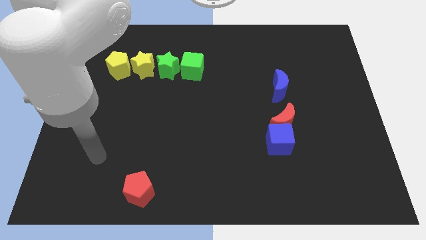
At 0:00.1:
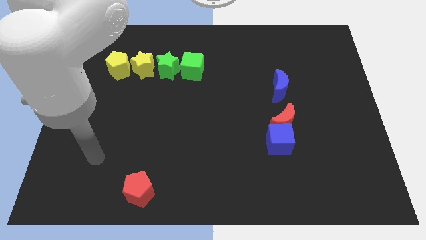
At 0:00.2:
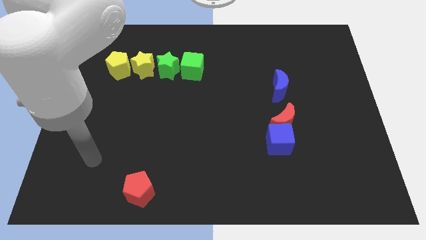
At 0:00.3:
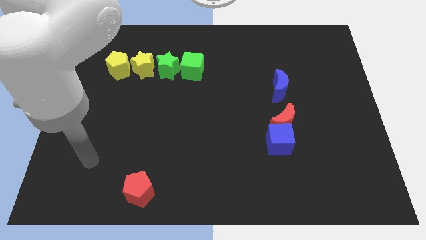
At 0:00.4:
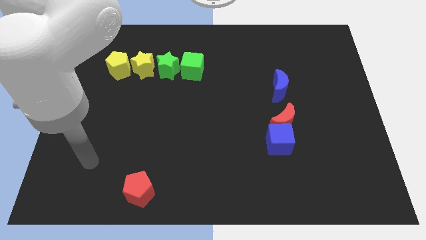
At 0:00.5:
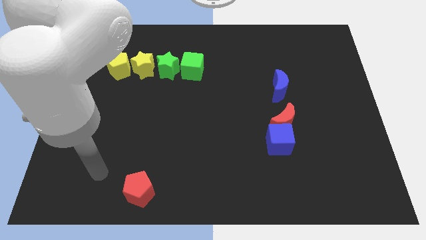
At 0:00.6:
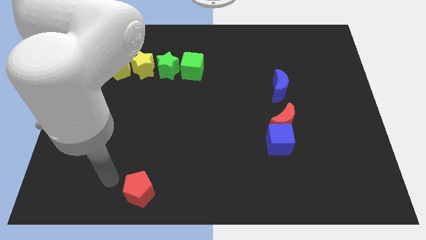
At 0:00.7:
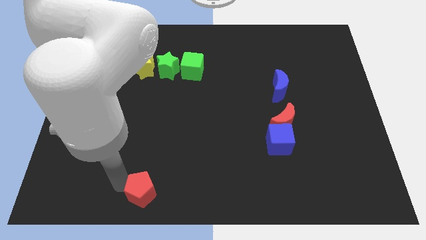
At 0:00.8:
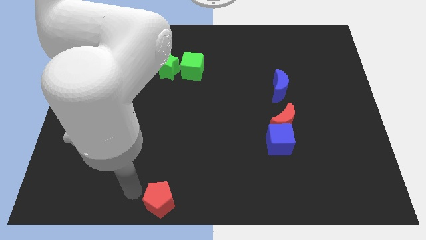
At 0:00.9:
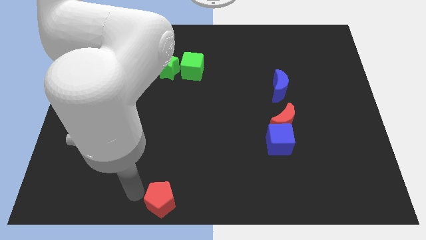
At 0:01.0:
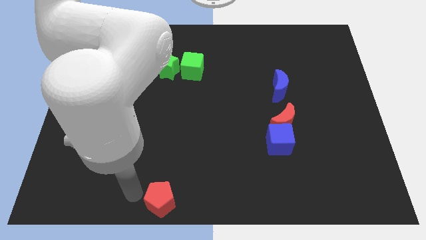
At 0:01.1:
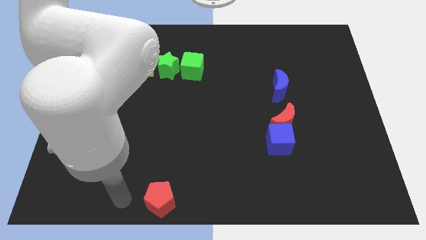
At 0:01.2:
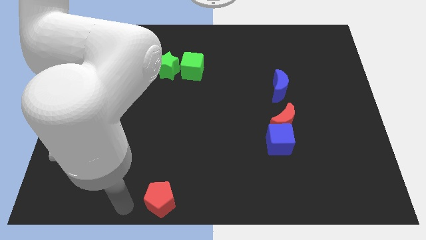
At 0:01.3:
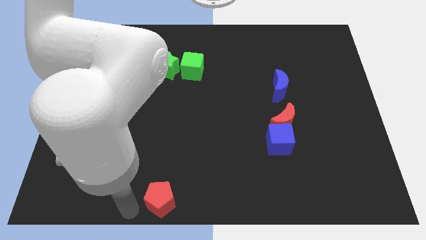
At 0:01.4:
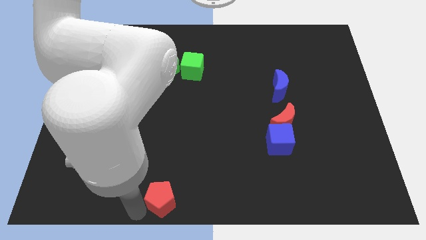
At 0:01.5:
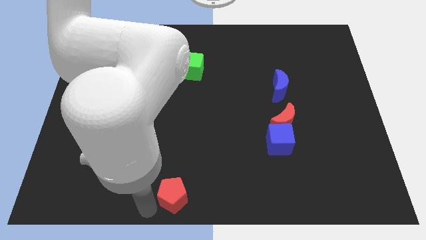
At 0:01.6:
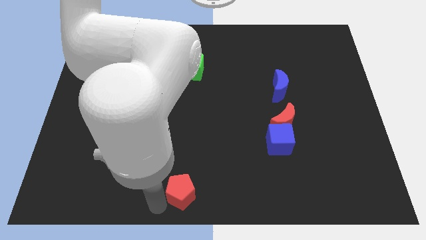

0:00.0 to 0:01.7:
move the red pentagon to the bottom center of the board

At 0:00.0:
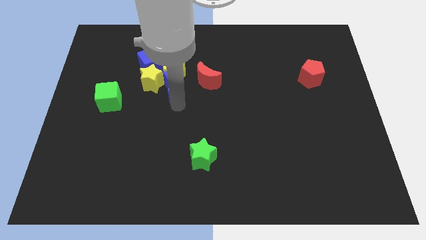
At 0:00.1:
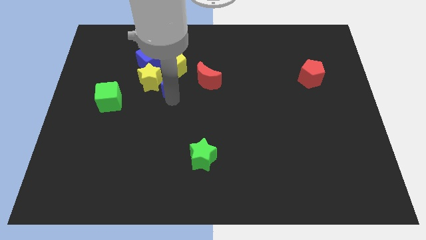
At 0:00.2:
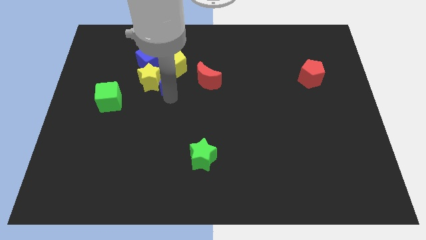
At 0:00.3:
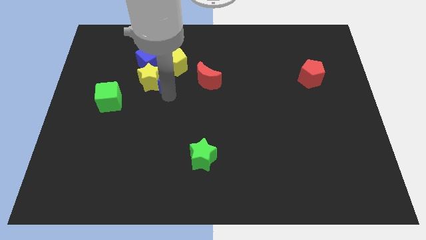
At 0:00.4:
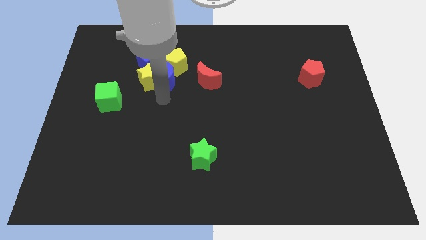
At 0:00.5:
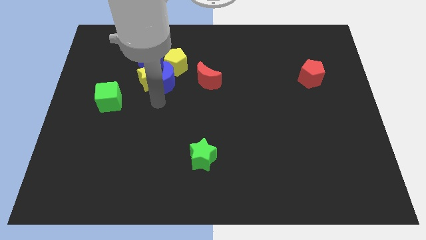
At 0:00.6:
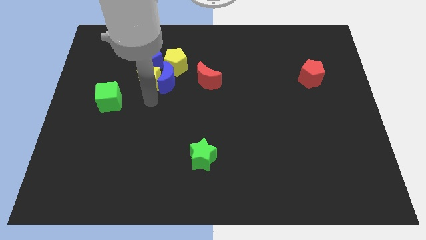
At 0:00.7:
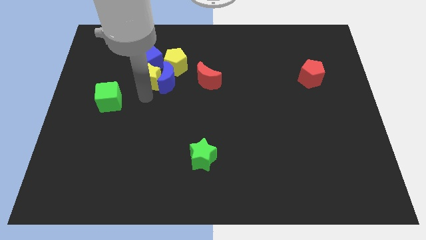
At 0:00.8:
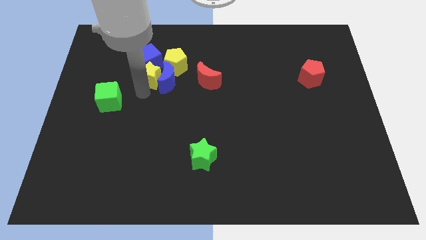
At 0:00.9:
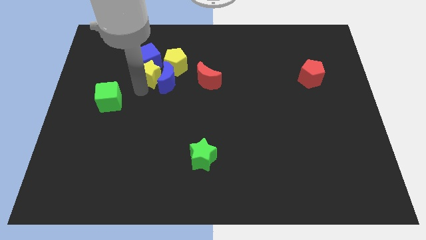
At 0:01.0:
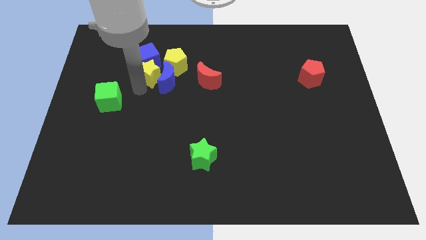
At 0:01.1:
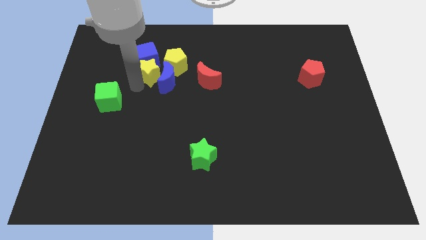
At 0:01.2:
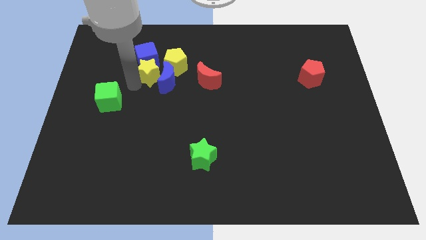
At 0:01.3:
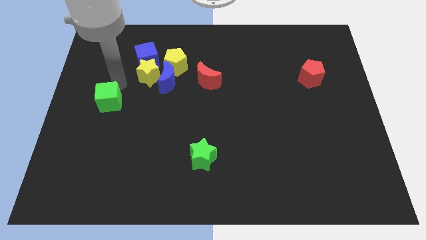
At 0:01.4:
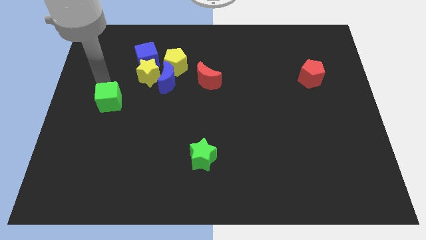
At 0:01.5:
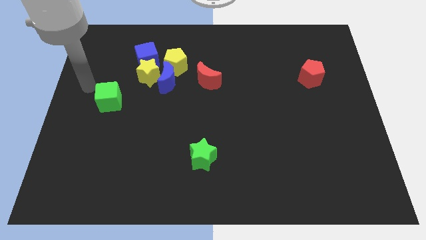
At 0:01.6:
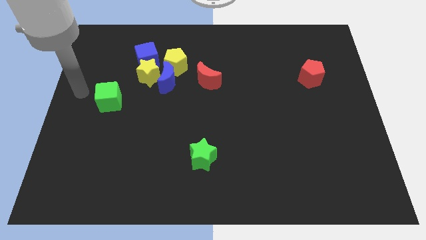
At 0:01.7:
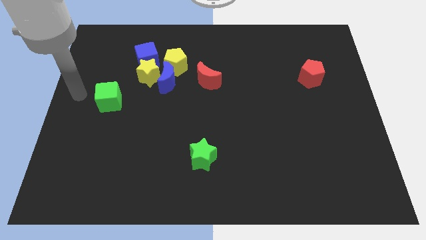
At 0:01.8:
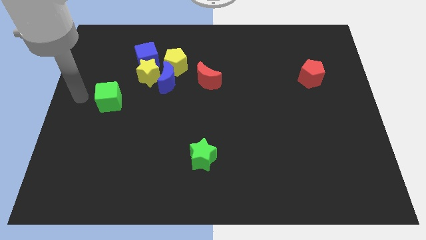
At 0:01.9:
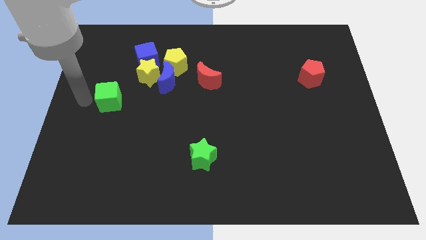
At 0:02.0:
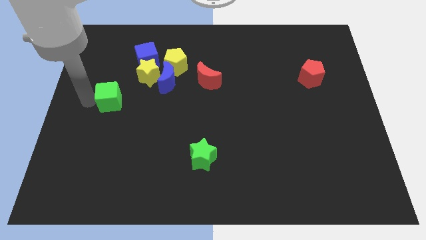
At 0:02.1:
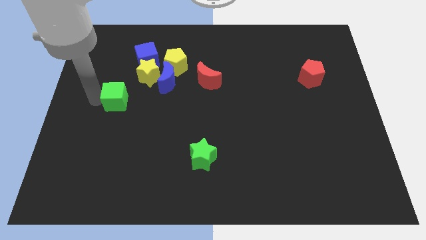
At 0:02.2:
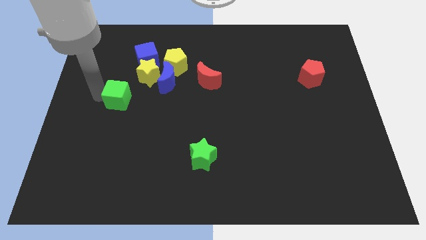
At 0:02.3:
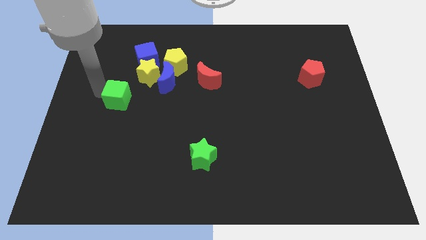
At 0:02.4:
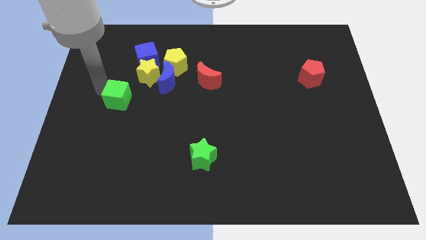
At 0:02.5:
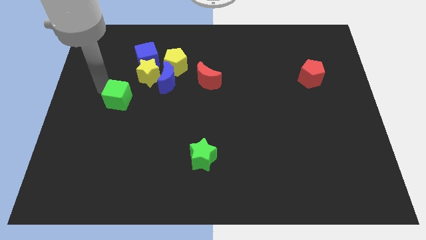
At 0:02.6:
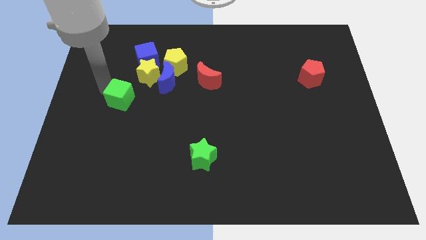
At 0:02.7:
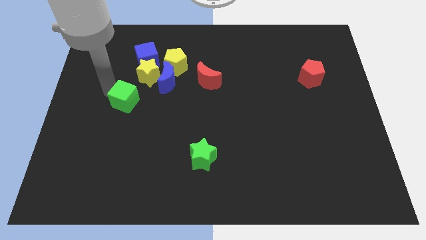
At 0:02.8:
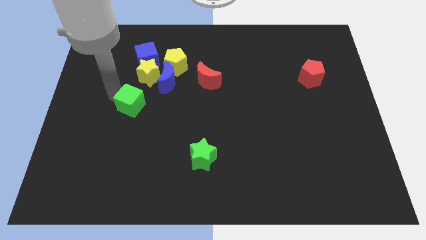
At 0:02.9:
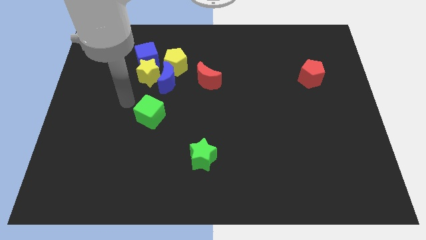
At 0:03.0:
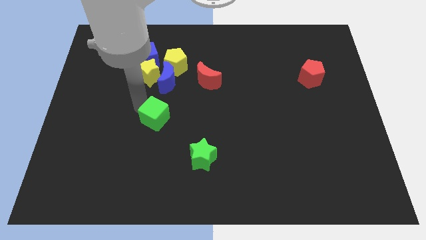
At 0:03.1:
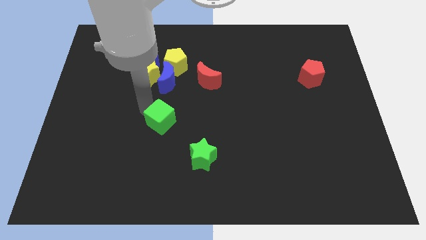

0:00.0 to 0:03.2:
move the green cube below the blue moon

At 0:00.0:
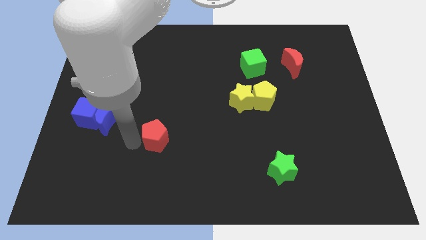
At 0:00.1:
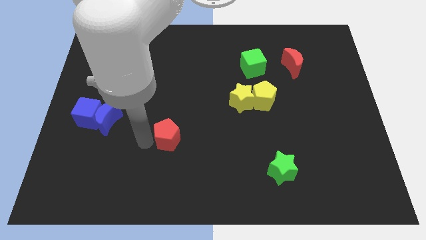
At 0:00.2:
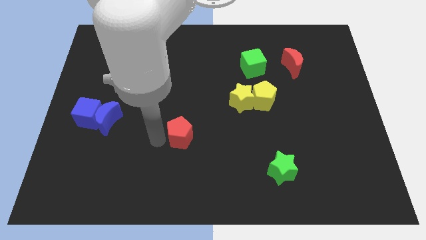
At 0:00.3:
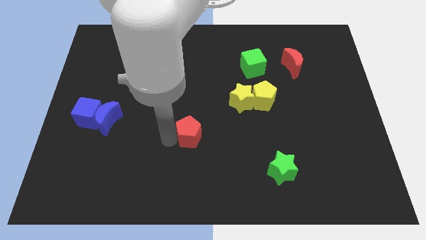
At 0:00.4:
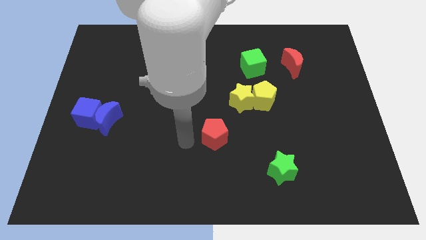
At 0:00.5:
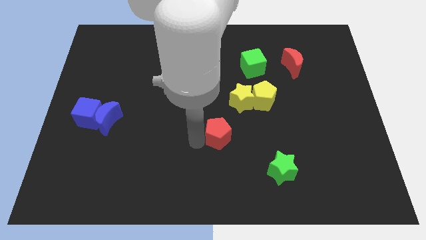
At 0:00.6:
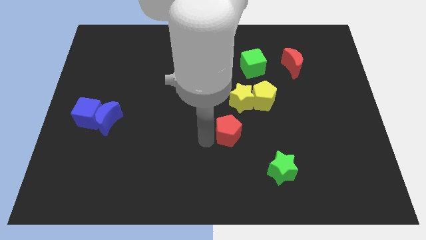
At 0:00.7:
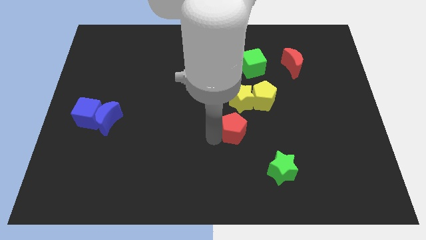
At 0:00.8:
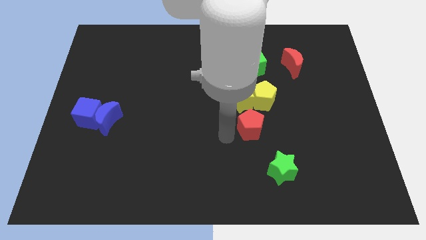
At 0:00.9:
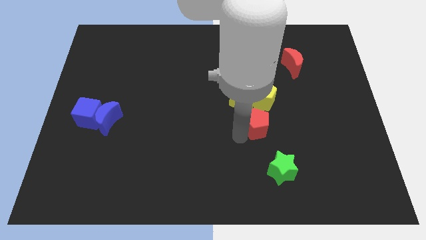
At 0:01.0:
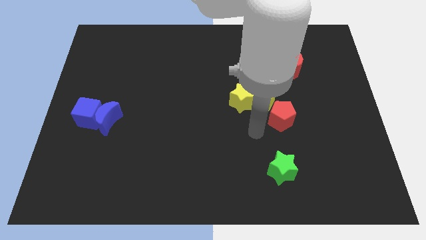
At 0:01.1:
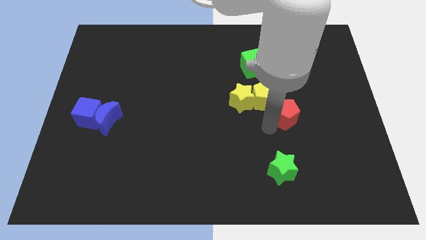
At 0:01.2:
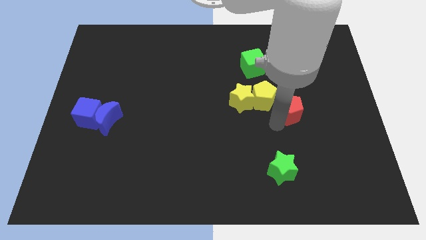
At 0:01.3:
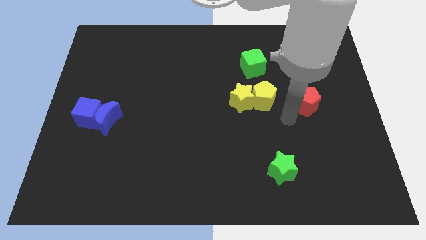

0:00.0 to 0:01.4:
move the red pentagon to the right of the yellow pentagon

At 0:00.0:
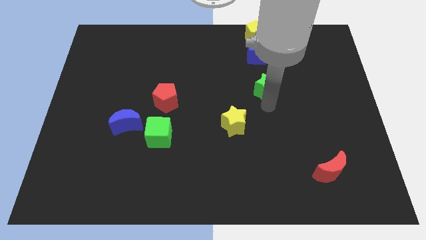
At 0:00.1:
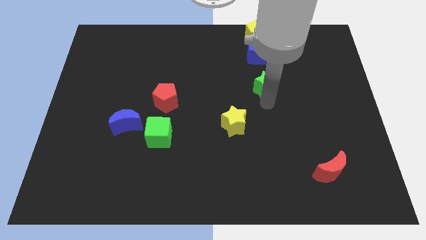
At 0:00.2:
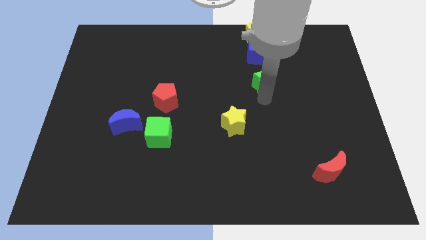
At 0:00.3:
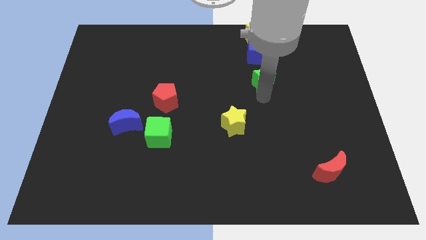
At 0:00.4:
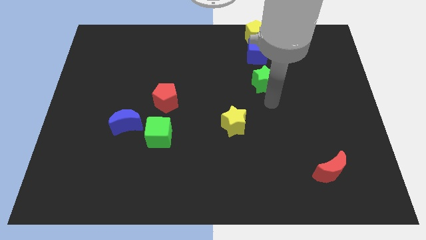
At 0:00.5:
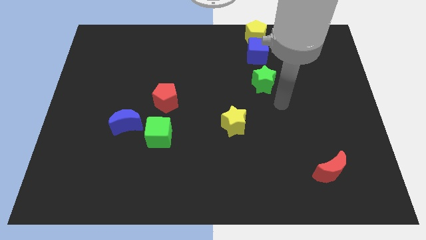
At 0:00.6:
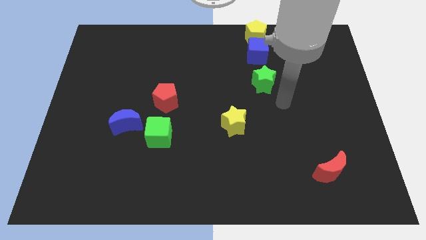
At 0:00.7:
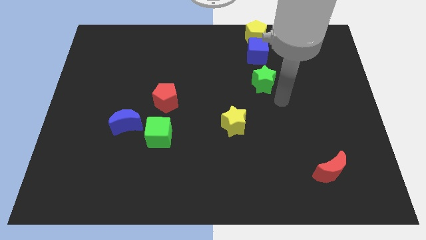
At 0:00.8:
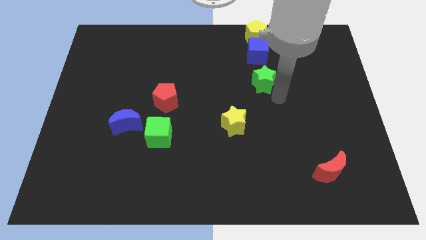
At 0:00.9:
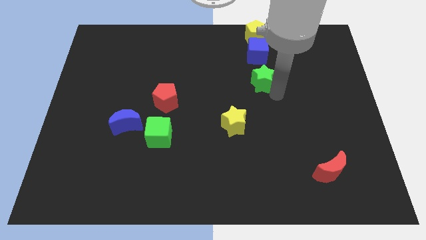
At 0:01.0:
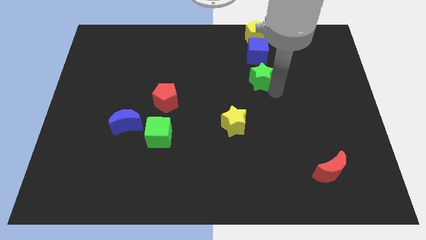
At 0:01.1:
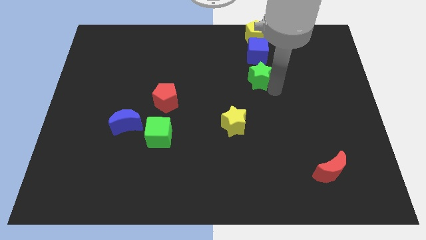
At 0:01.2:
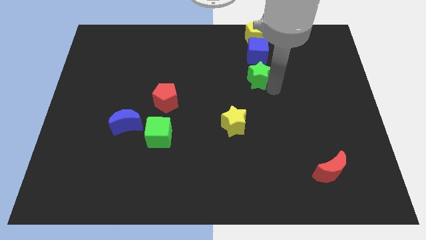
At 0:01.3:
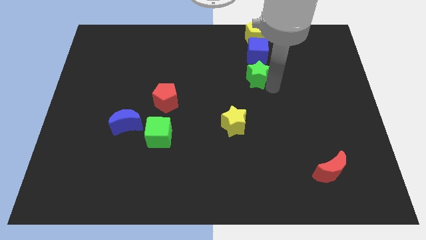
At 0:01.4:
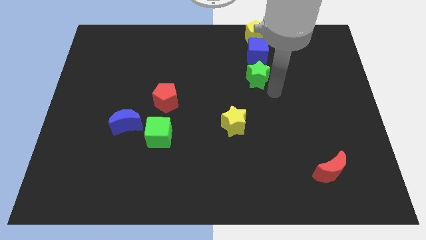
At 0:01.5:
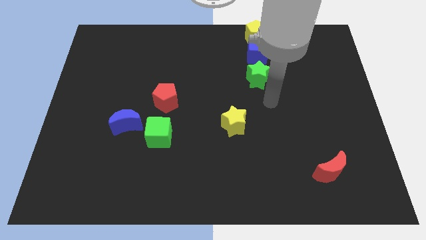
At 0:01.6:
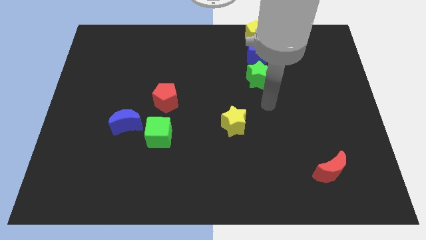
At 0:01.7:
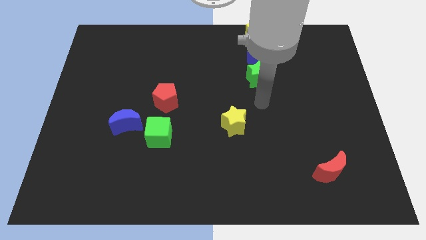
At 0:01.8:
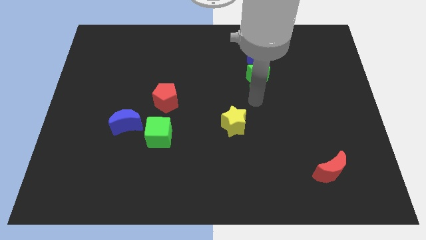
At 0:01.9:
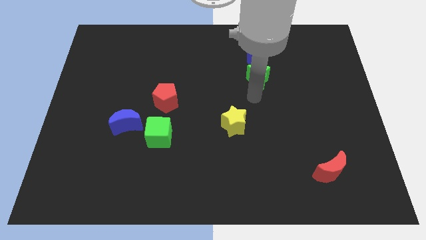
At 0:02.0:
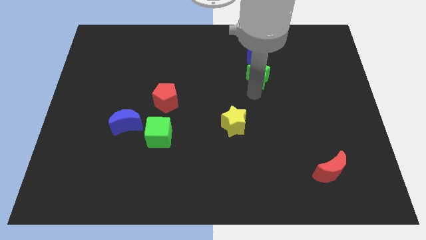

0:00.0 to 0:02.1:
move green star towards blue cube

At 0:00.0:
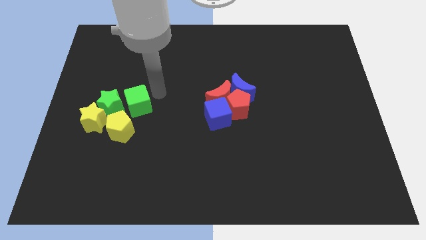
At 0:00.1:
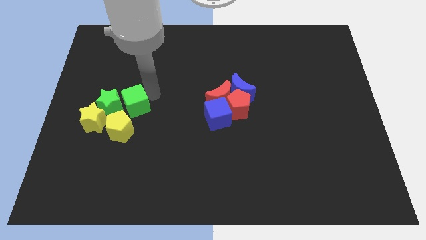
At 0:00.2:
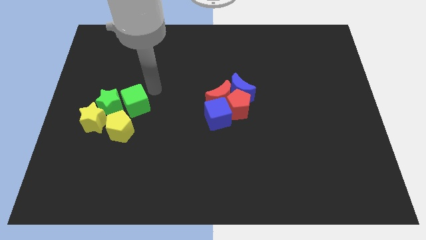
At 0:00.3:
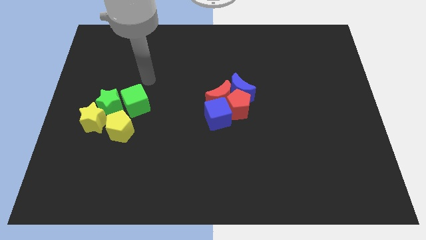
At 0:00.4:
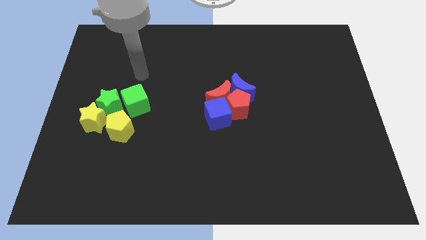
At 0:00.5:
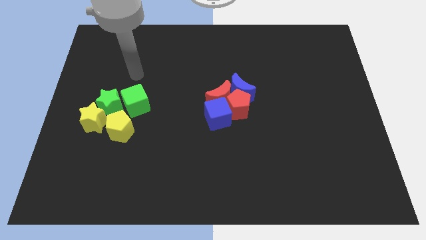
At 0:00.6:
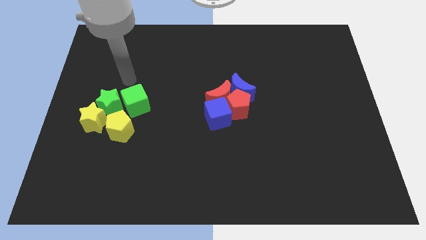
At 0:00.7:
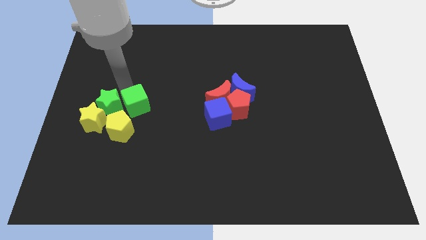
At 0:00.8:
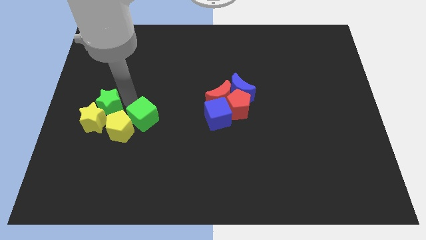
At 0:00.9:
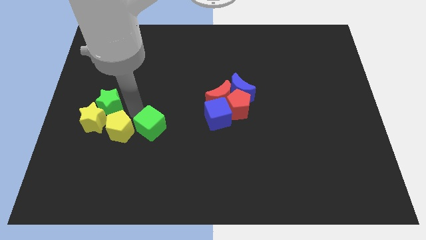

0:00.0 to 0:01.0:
push the green cube to the right of the yellow pentagon
